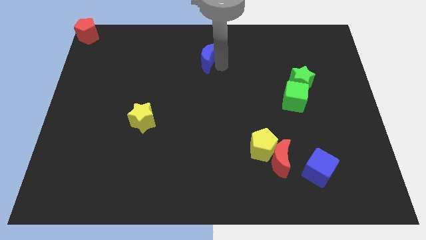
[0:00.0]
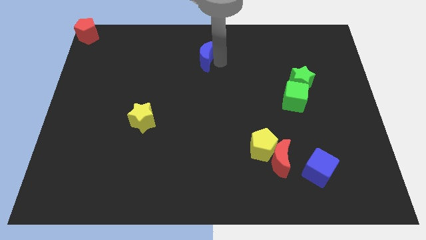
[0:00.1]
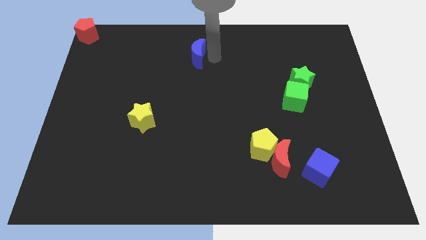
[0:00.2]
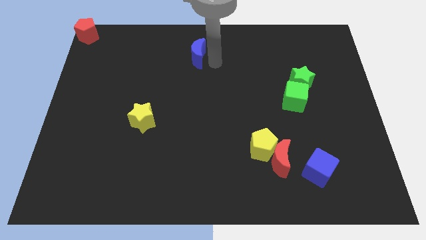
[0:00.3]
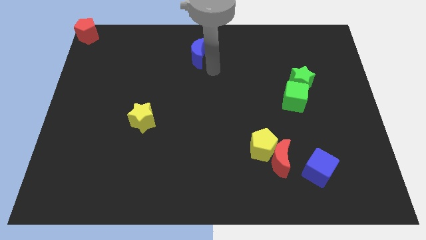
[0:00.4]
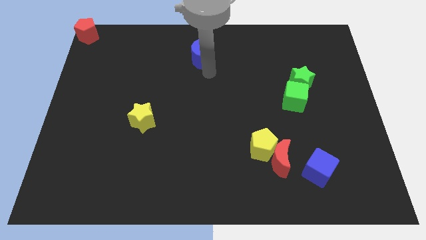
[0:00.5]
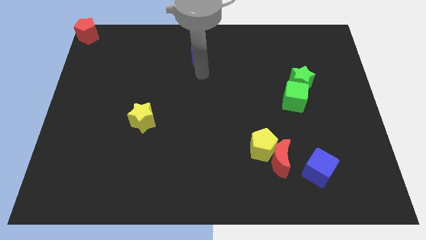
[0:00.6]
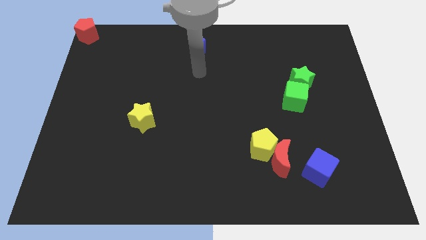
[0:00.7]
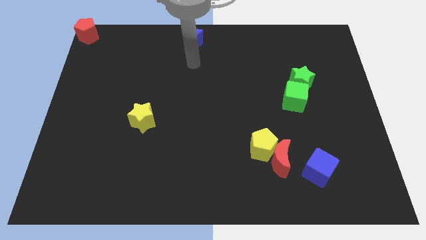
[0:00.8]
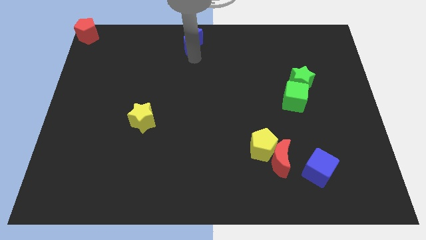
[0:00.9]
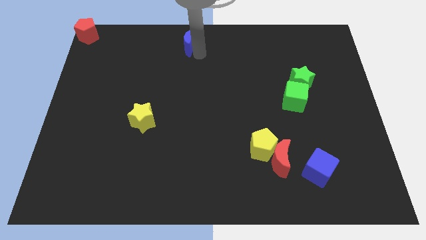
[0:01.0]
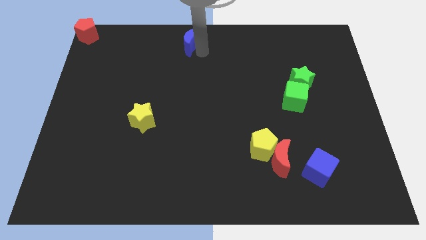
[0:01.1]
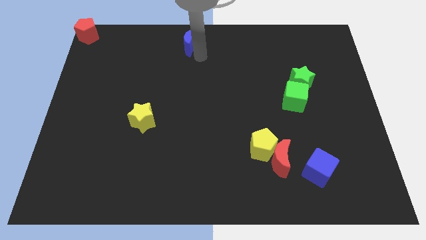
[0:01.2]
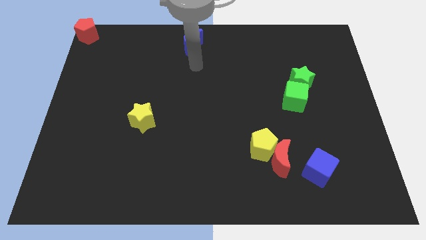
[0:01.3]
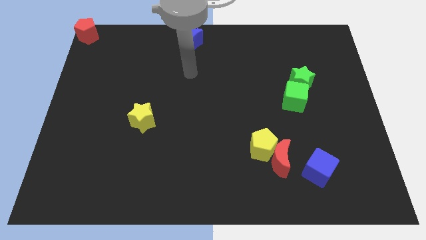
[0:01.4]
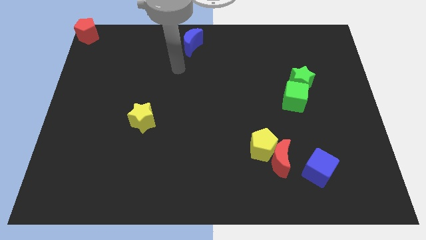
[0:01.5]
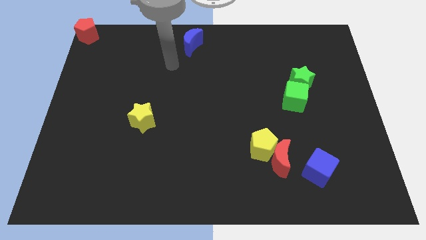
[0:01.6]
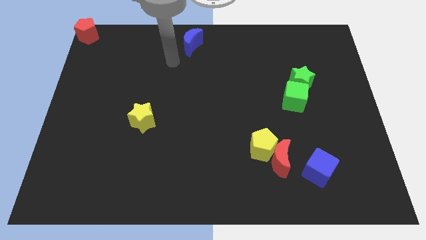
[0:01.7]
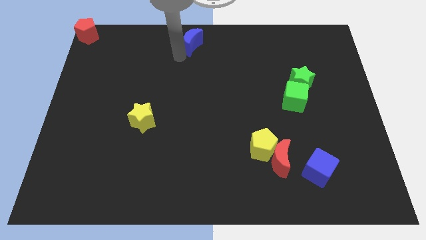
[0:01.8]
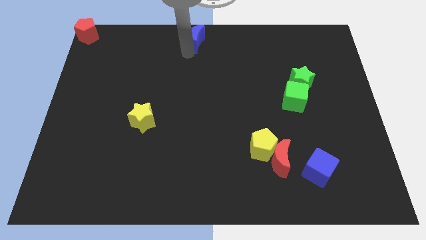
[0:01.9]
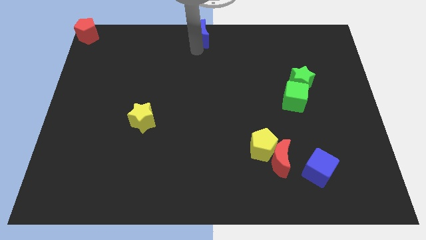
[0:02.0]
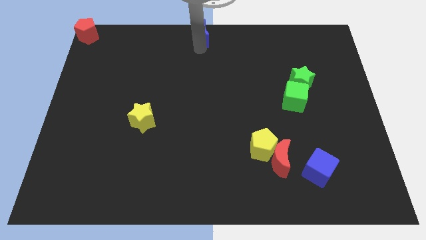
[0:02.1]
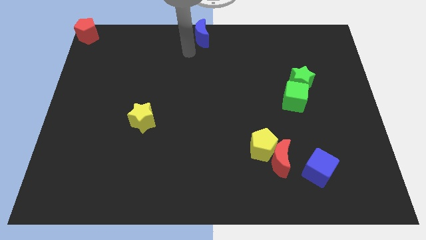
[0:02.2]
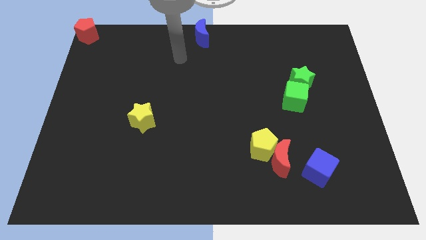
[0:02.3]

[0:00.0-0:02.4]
move the blue moon to the top center of the board

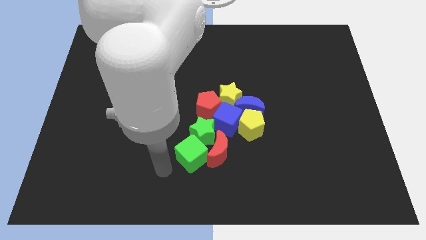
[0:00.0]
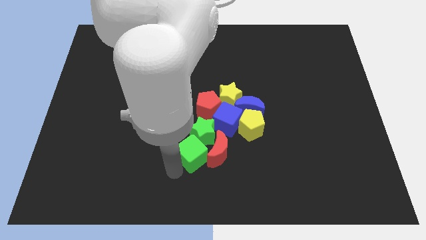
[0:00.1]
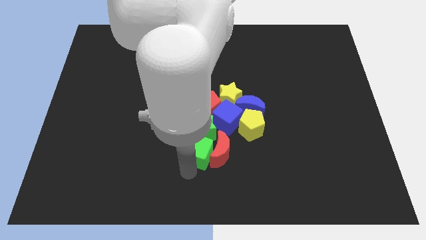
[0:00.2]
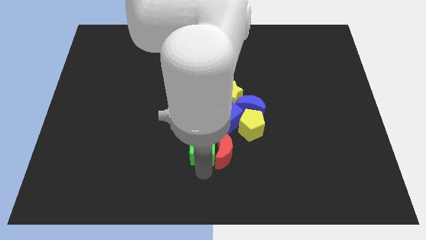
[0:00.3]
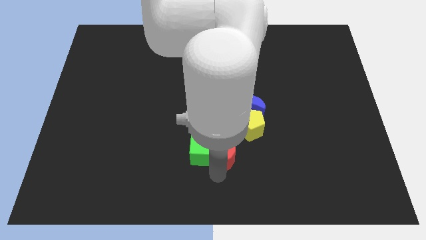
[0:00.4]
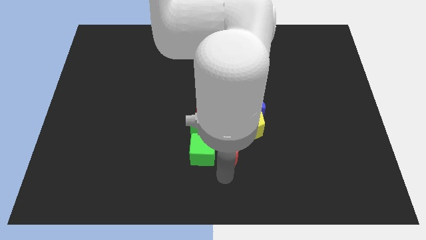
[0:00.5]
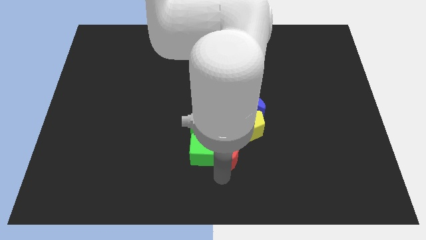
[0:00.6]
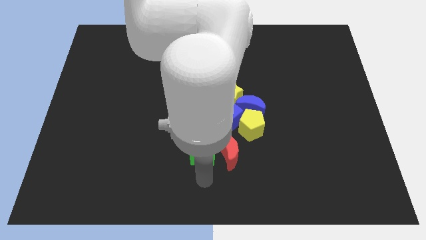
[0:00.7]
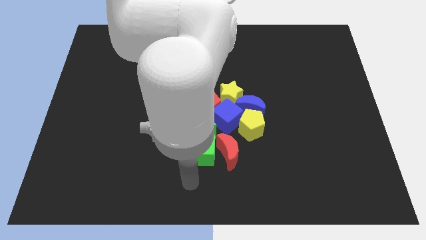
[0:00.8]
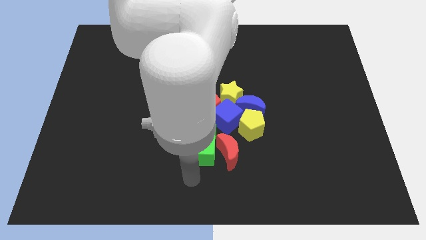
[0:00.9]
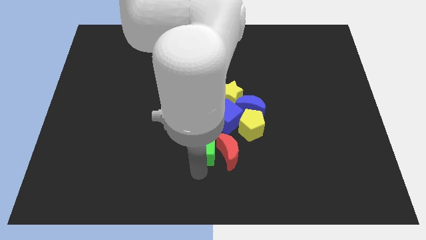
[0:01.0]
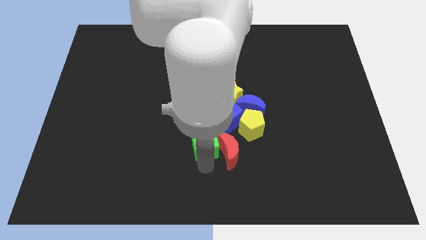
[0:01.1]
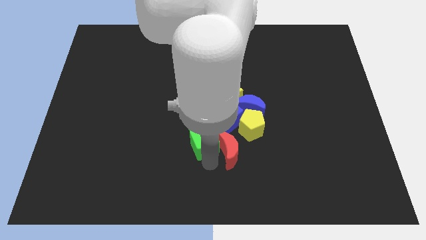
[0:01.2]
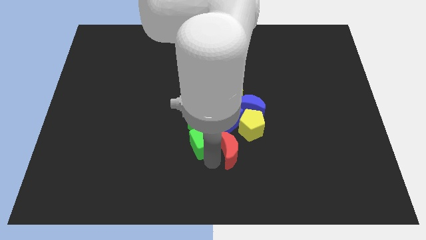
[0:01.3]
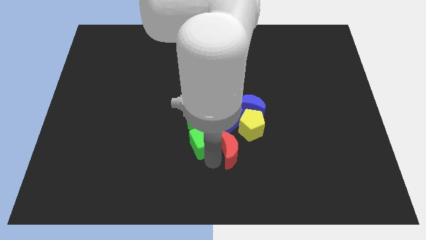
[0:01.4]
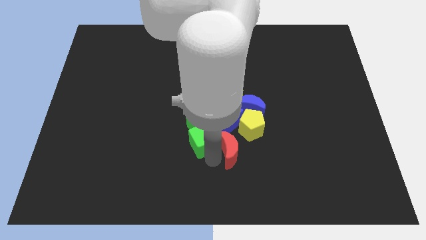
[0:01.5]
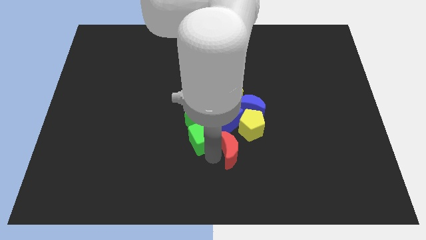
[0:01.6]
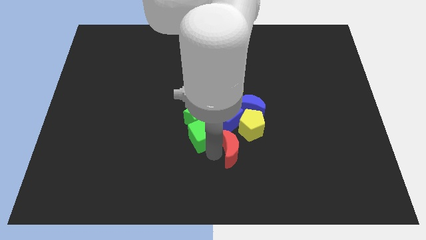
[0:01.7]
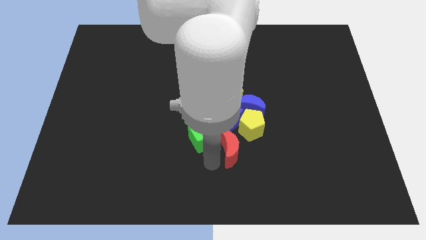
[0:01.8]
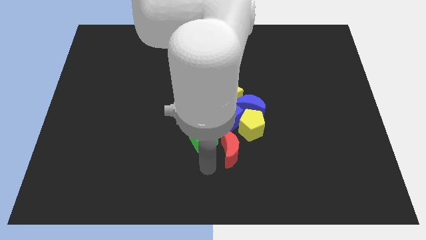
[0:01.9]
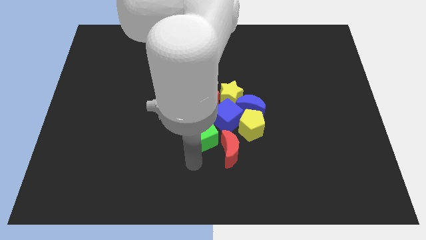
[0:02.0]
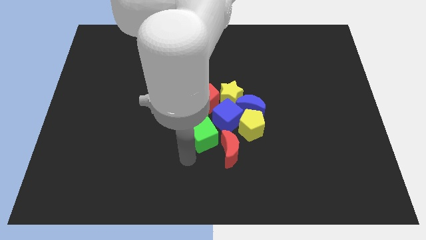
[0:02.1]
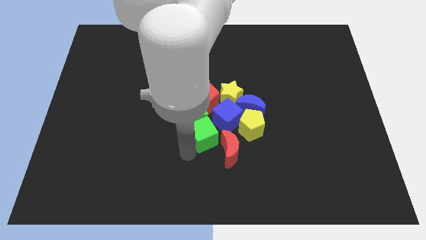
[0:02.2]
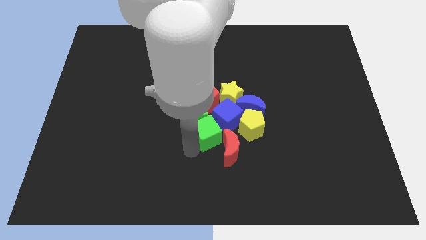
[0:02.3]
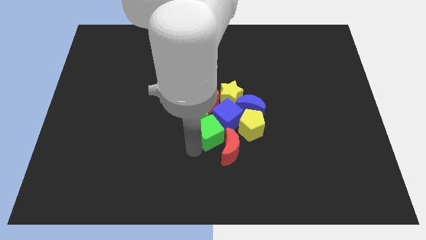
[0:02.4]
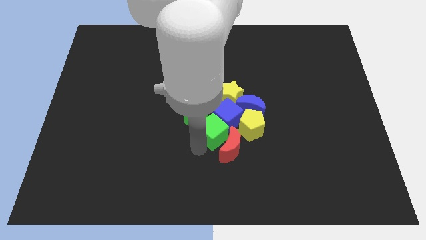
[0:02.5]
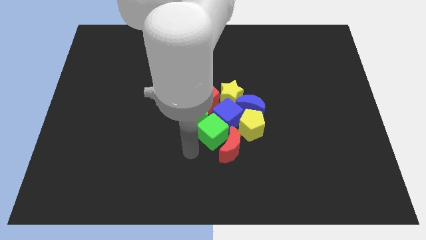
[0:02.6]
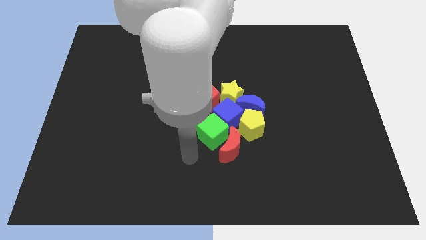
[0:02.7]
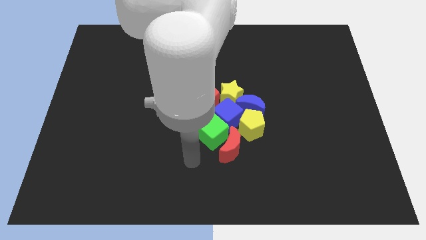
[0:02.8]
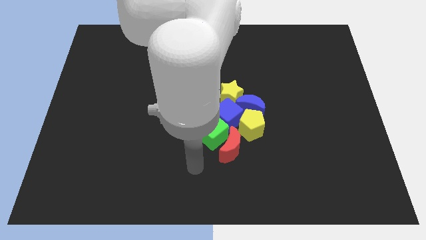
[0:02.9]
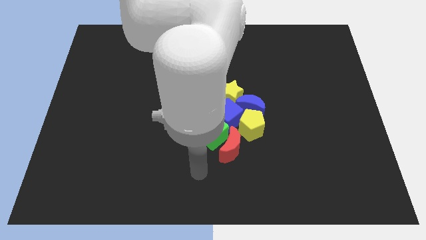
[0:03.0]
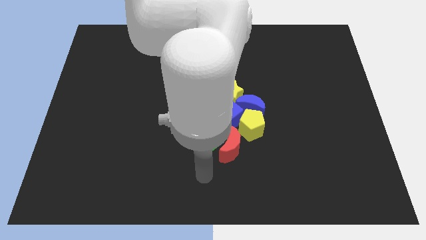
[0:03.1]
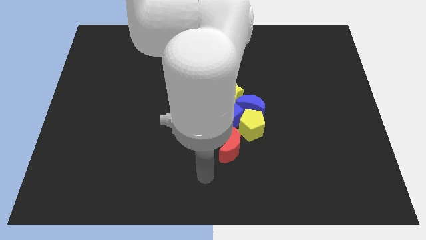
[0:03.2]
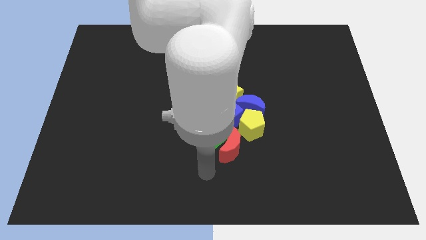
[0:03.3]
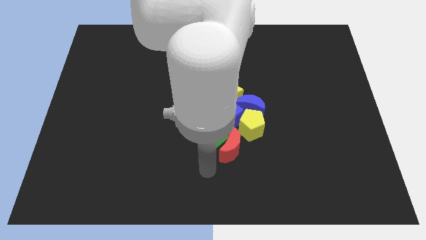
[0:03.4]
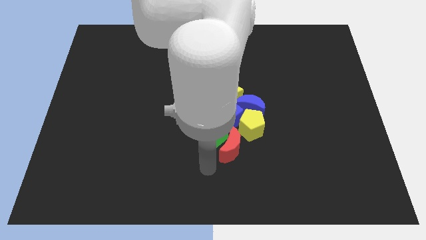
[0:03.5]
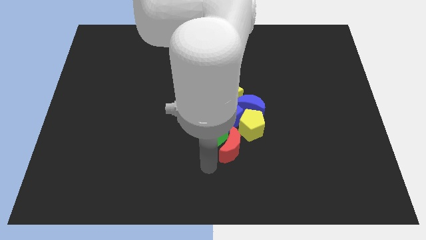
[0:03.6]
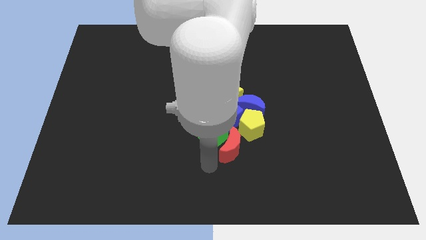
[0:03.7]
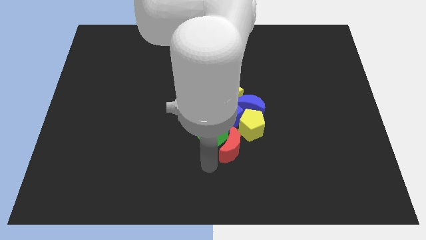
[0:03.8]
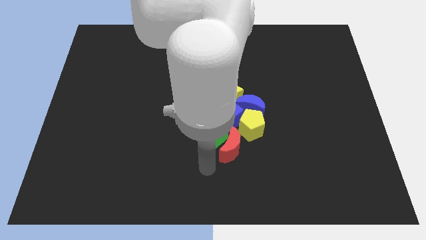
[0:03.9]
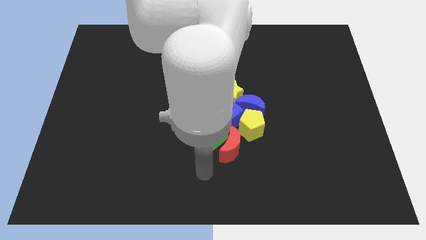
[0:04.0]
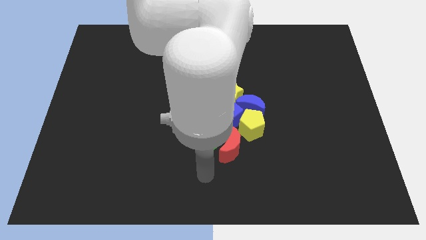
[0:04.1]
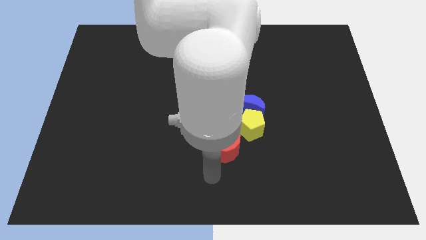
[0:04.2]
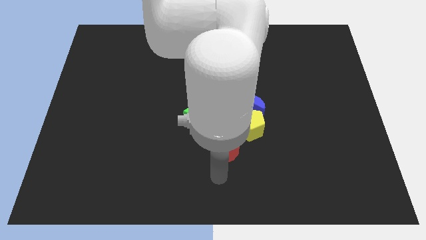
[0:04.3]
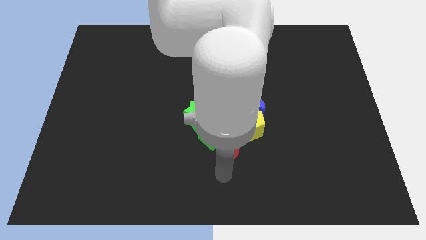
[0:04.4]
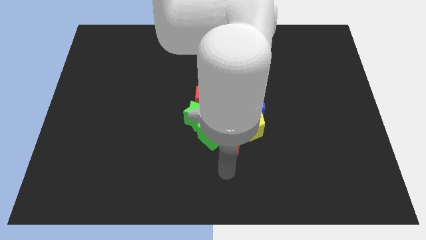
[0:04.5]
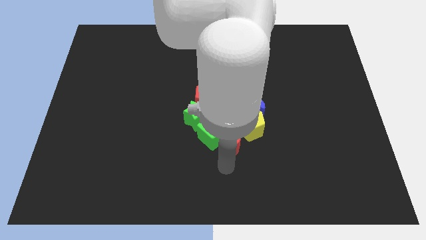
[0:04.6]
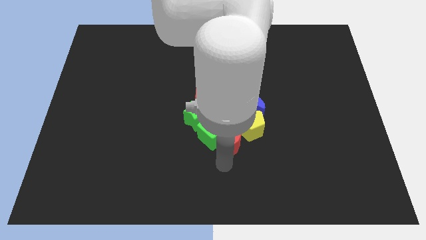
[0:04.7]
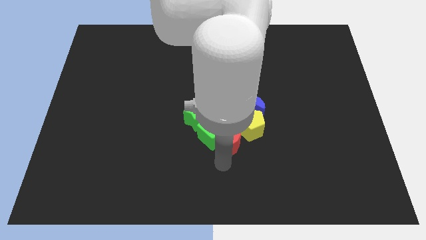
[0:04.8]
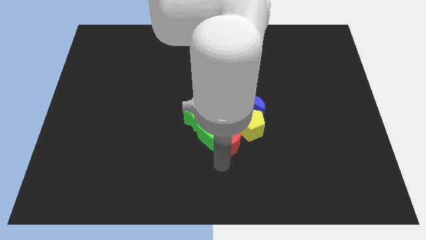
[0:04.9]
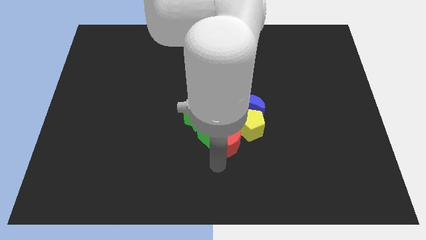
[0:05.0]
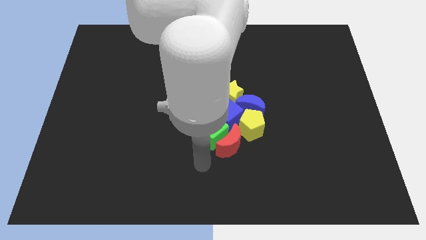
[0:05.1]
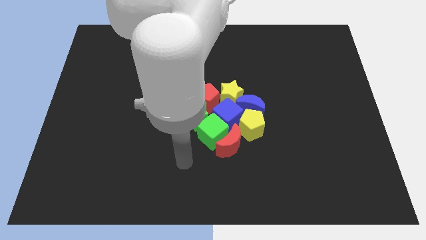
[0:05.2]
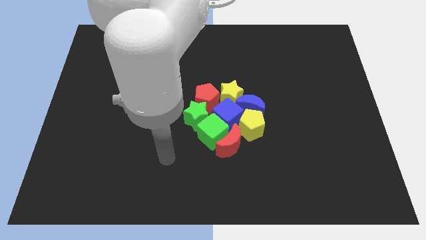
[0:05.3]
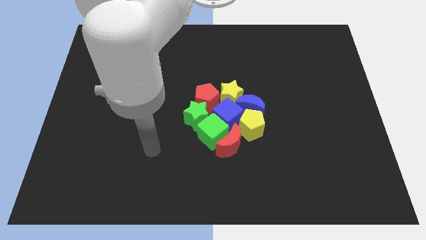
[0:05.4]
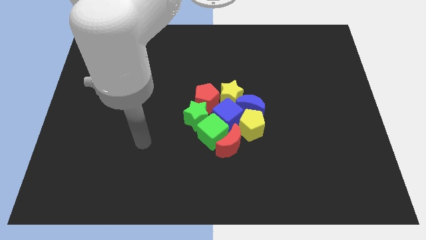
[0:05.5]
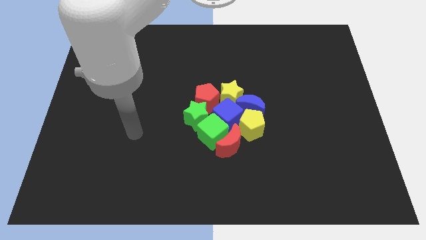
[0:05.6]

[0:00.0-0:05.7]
place the green cube in between green star and red moon

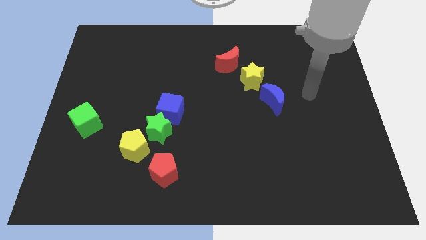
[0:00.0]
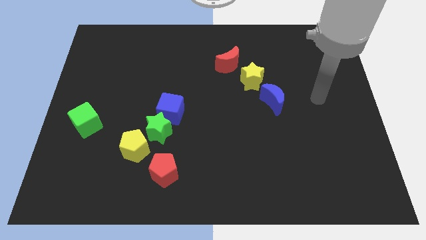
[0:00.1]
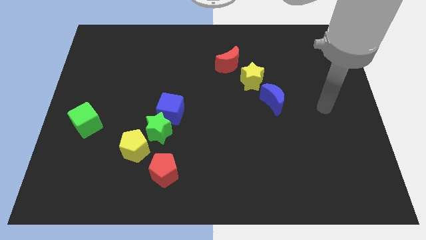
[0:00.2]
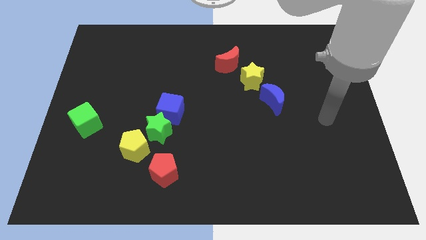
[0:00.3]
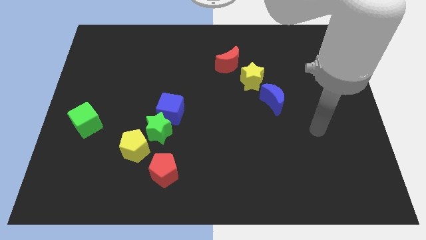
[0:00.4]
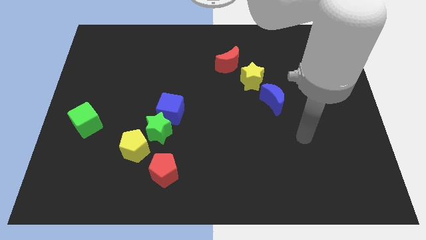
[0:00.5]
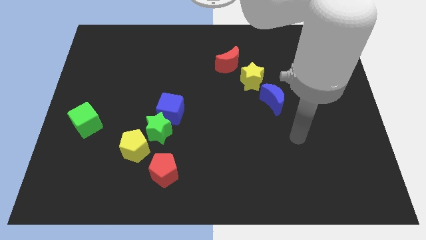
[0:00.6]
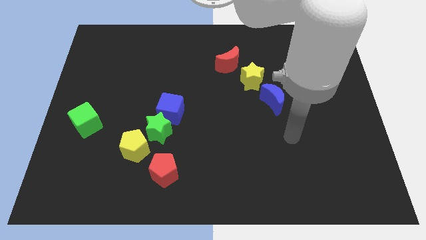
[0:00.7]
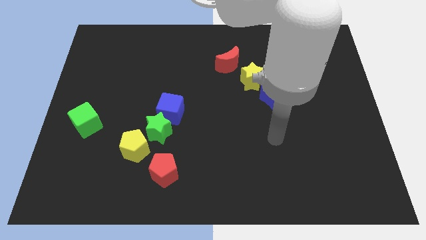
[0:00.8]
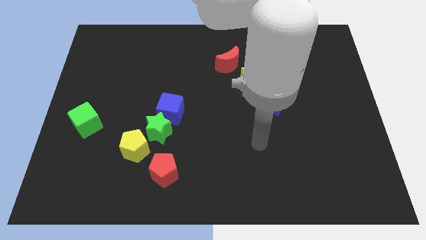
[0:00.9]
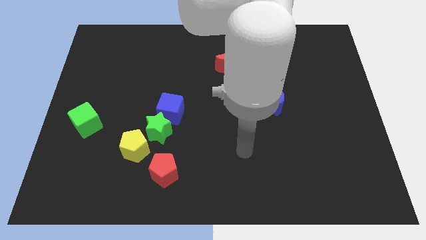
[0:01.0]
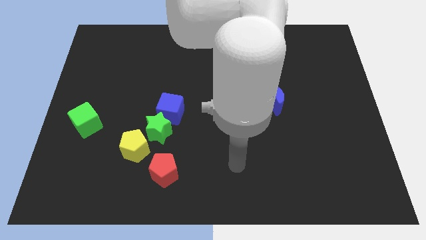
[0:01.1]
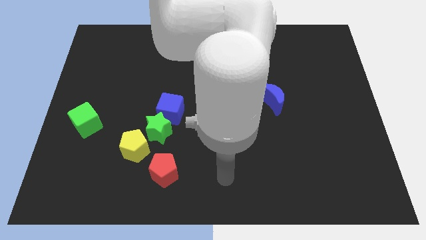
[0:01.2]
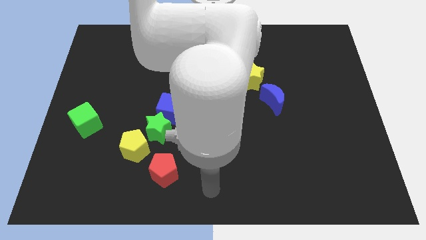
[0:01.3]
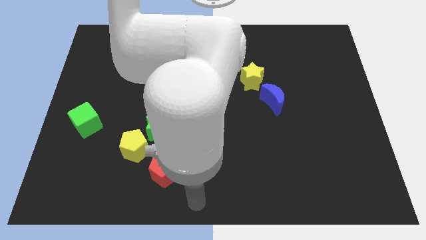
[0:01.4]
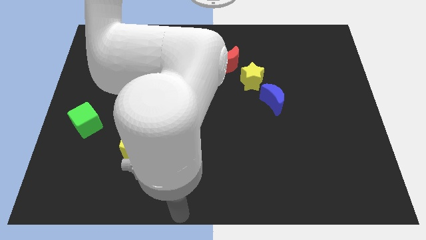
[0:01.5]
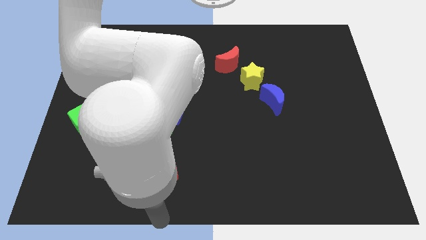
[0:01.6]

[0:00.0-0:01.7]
place your hand under the red pentagon
